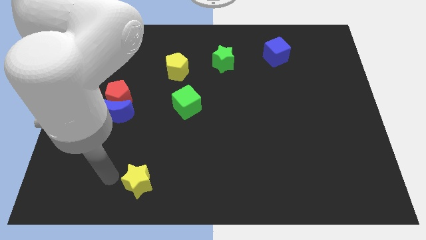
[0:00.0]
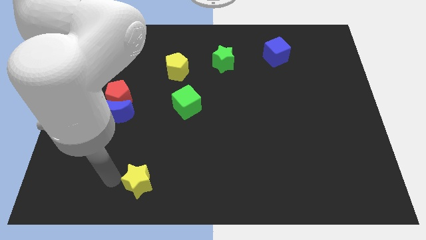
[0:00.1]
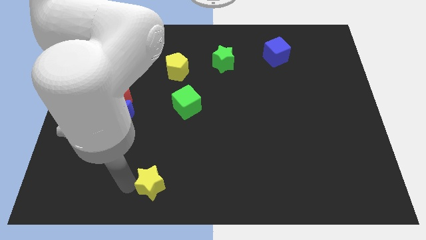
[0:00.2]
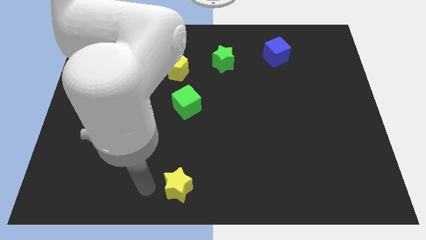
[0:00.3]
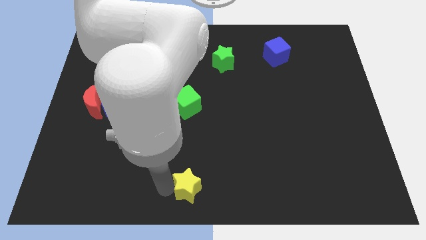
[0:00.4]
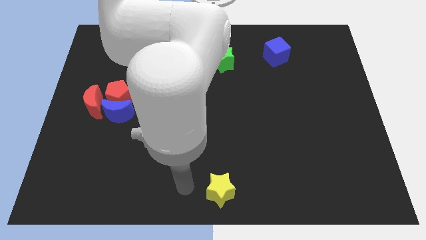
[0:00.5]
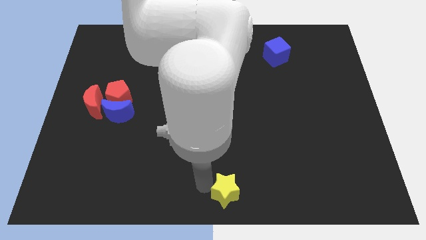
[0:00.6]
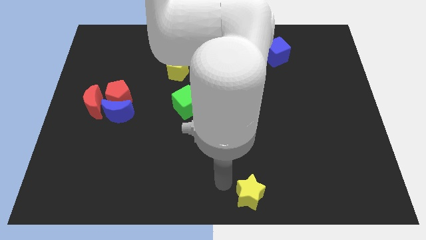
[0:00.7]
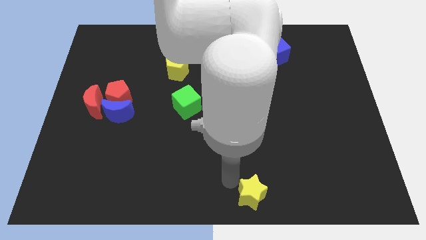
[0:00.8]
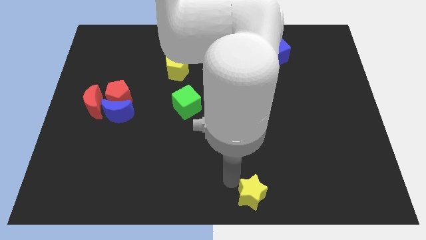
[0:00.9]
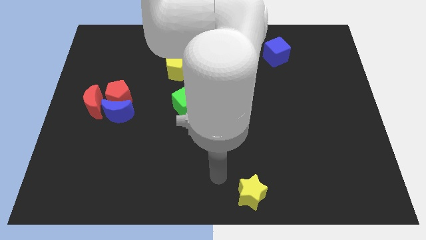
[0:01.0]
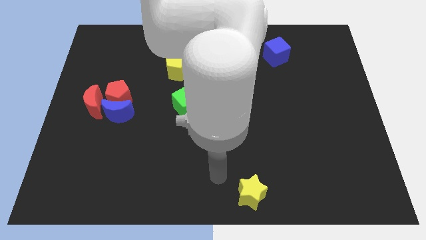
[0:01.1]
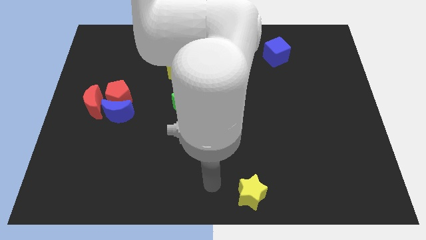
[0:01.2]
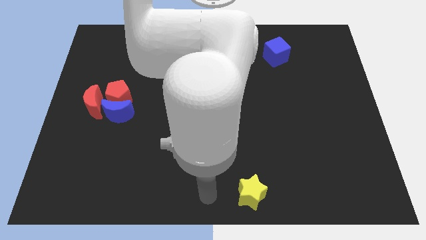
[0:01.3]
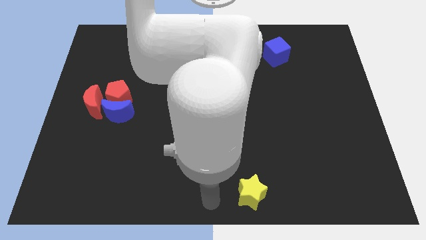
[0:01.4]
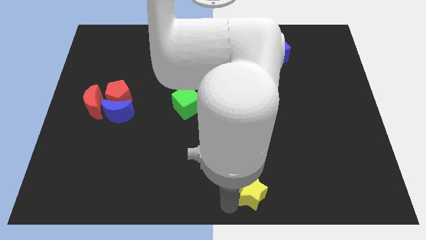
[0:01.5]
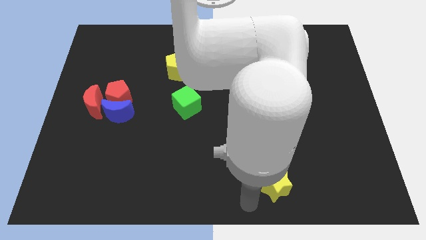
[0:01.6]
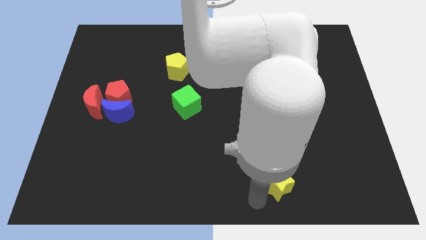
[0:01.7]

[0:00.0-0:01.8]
push the yellow star to the right side of the board

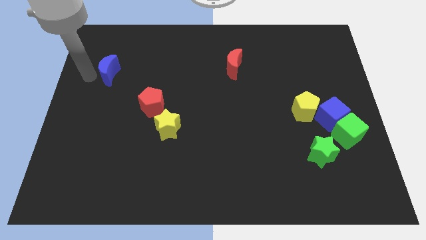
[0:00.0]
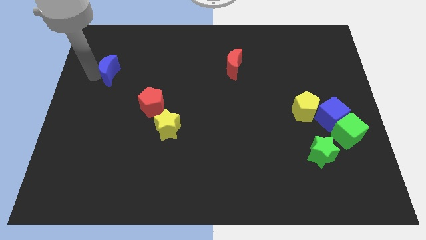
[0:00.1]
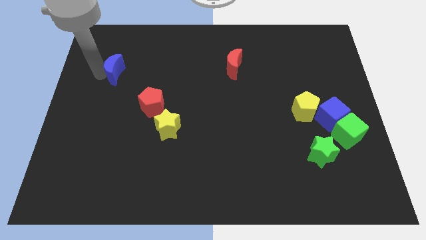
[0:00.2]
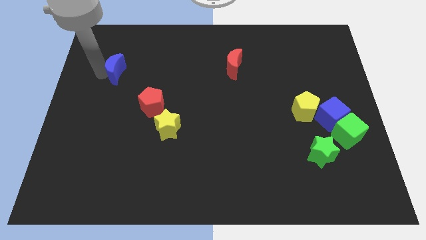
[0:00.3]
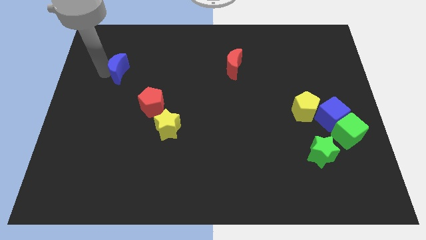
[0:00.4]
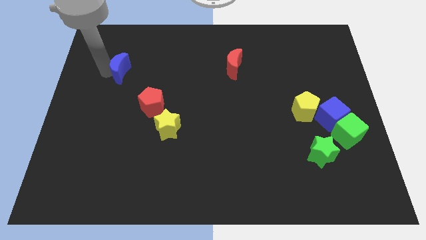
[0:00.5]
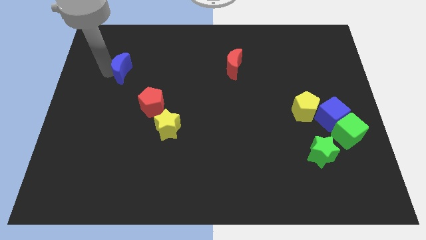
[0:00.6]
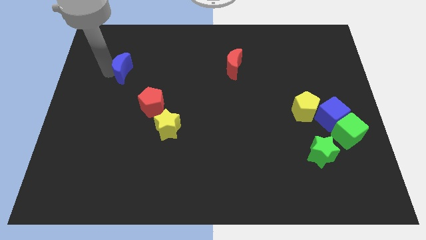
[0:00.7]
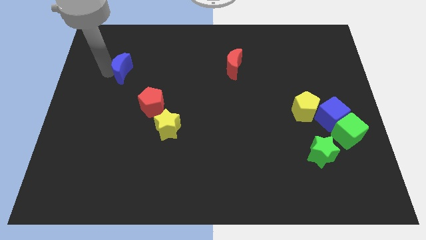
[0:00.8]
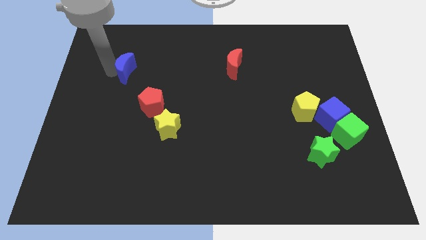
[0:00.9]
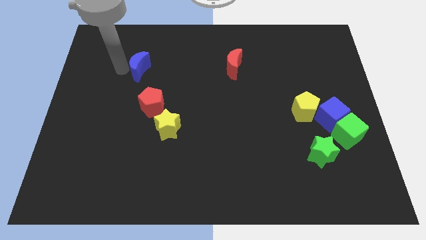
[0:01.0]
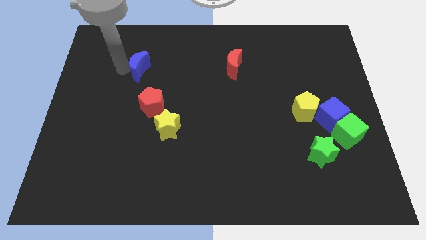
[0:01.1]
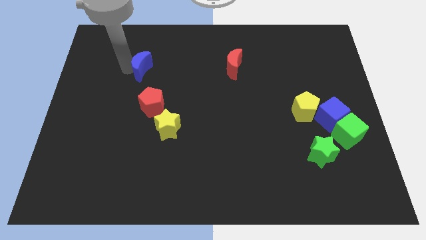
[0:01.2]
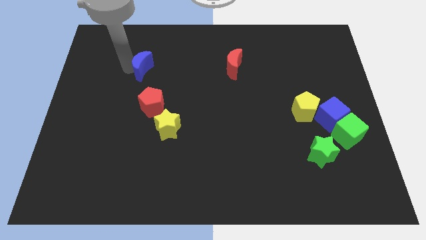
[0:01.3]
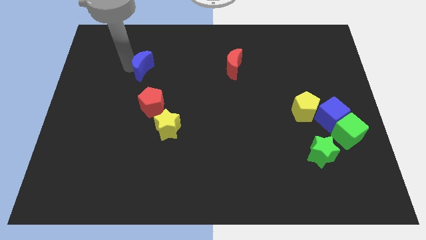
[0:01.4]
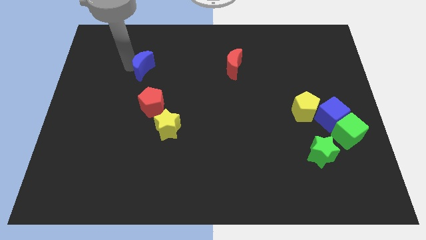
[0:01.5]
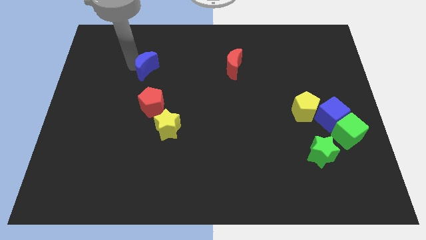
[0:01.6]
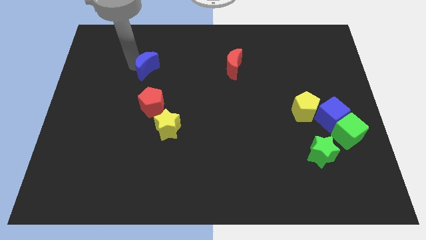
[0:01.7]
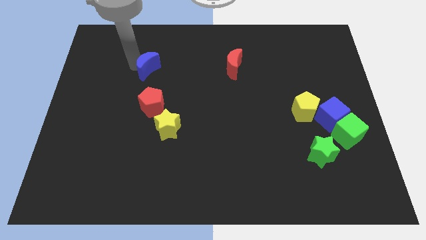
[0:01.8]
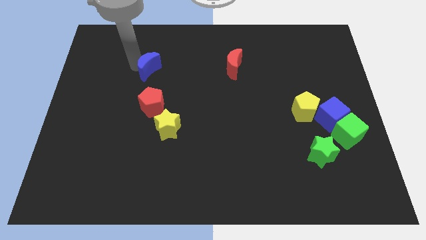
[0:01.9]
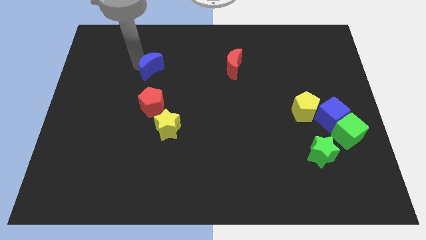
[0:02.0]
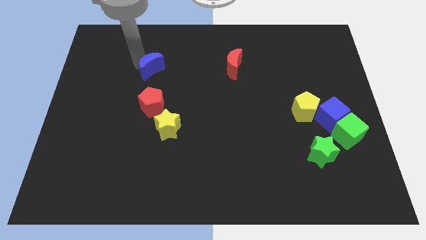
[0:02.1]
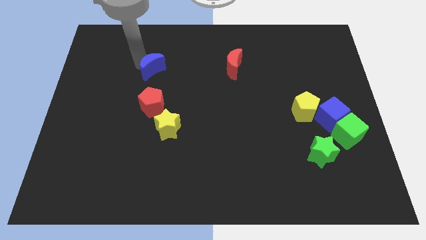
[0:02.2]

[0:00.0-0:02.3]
moev the blue crescent above the red pentagon

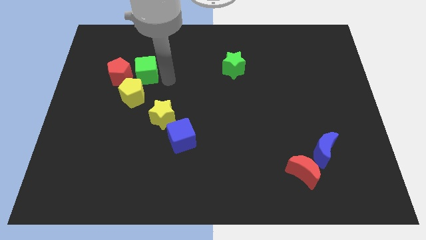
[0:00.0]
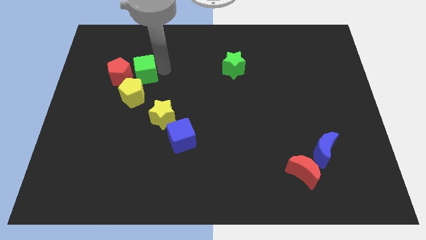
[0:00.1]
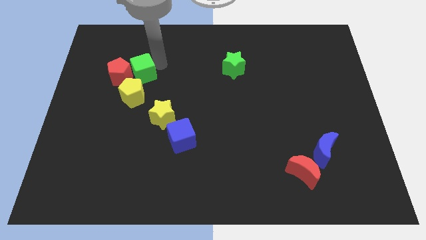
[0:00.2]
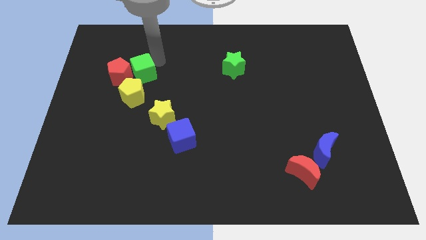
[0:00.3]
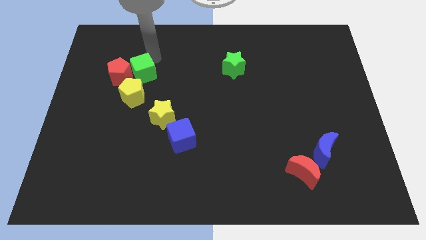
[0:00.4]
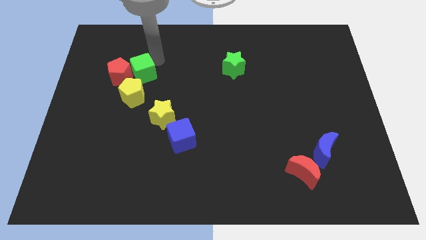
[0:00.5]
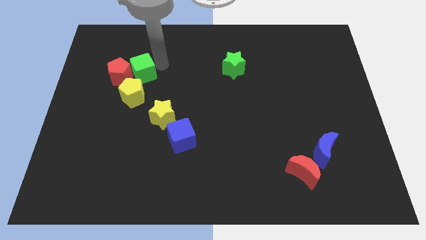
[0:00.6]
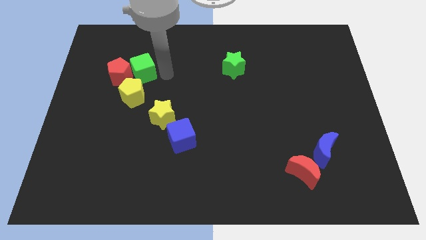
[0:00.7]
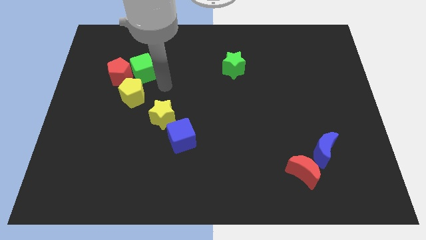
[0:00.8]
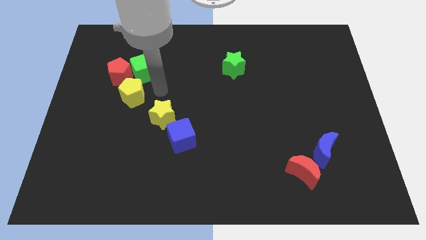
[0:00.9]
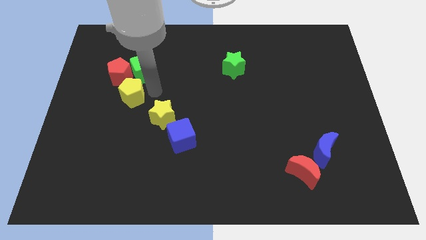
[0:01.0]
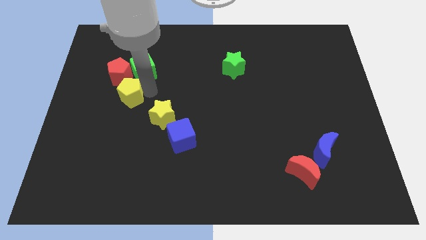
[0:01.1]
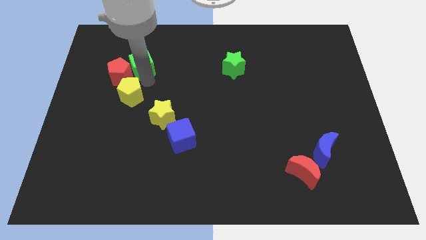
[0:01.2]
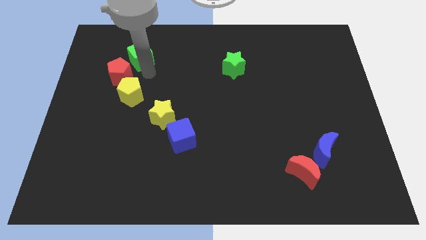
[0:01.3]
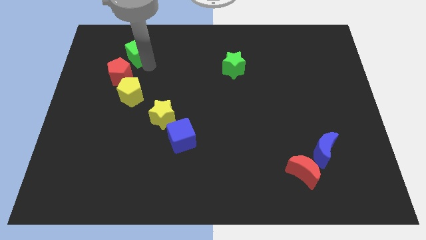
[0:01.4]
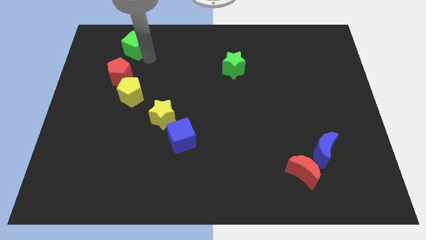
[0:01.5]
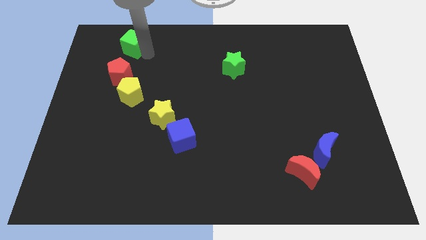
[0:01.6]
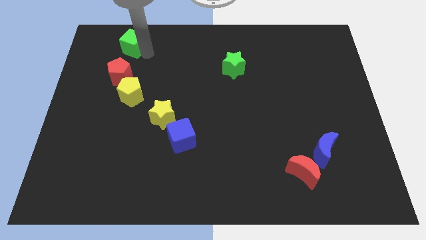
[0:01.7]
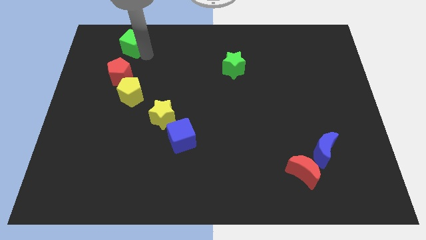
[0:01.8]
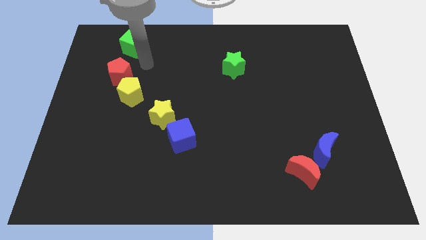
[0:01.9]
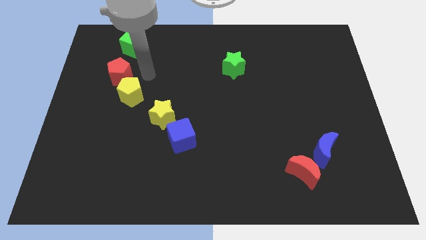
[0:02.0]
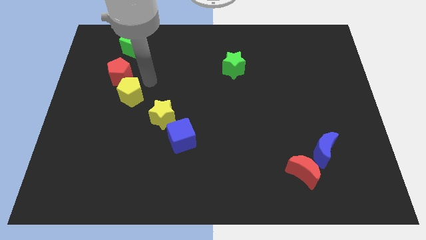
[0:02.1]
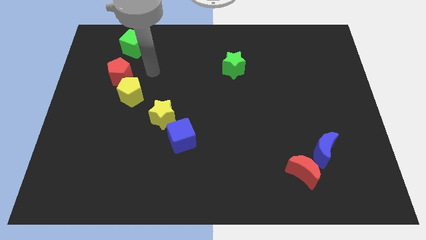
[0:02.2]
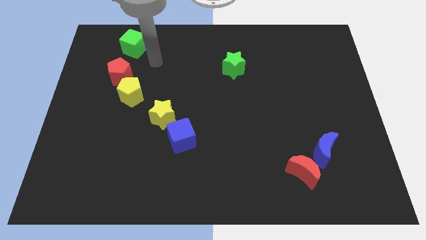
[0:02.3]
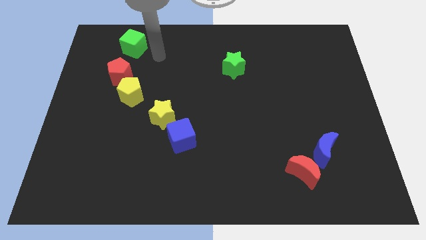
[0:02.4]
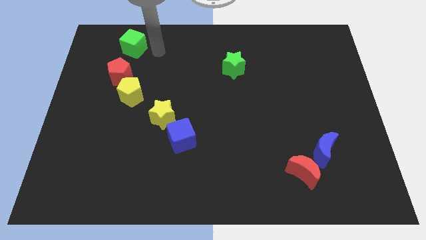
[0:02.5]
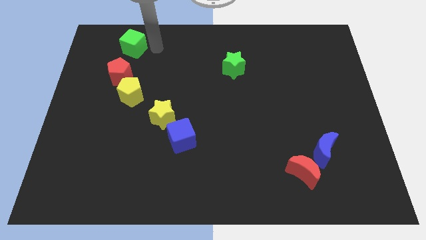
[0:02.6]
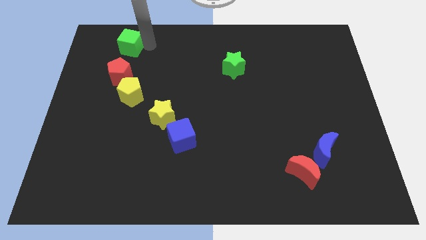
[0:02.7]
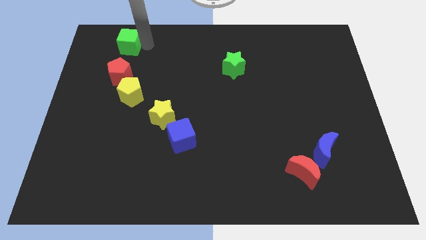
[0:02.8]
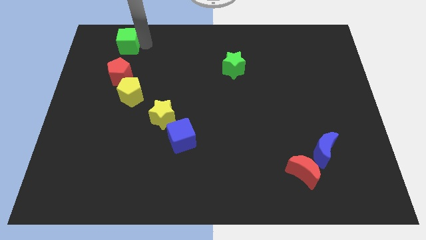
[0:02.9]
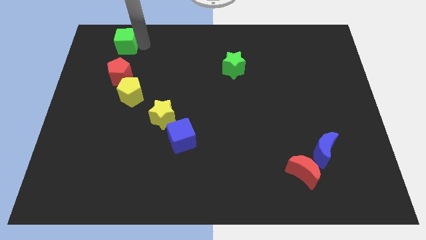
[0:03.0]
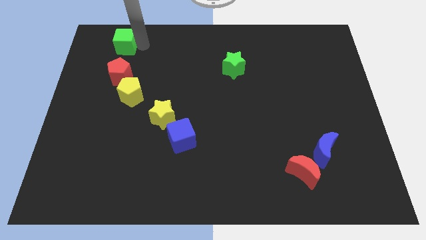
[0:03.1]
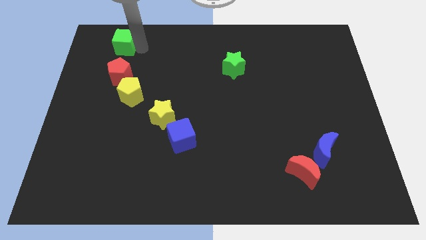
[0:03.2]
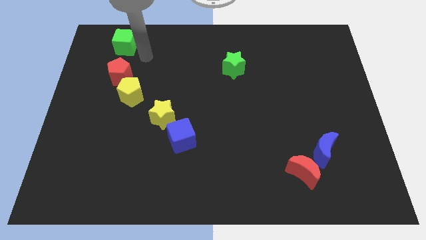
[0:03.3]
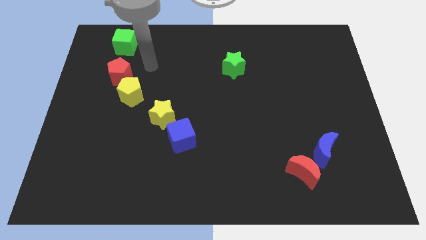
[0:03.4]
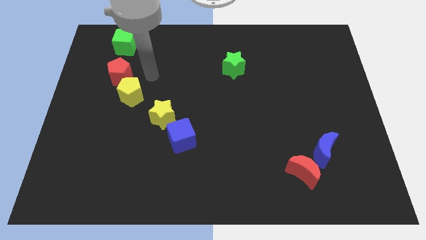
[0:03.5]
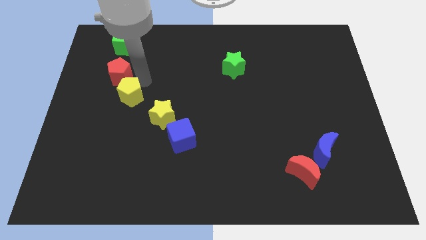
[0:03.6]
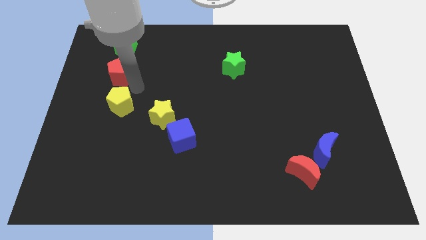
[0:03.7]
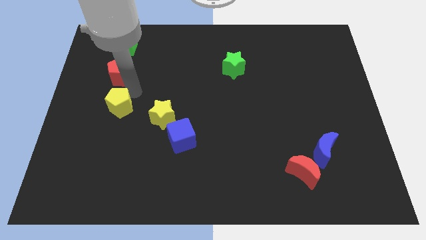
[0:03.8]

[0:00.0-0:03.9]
place green cube above red pentagon

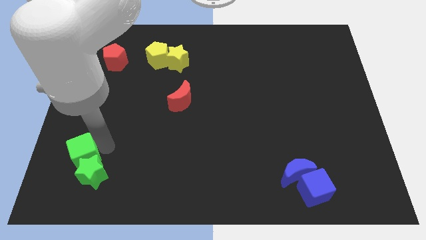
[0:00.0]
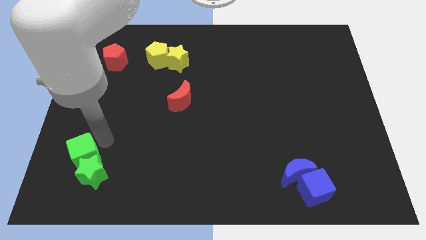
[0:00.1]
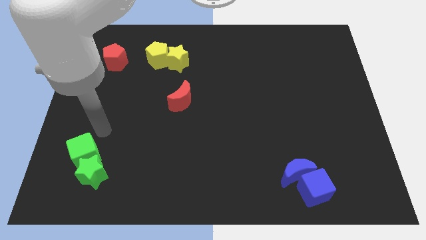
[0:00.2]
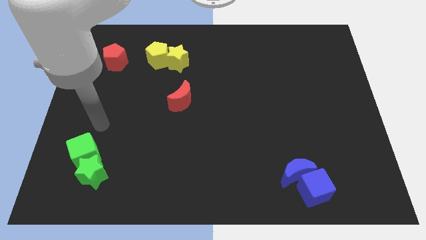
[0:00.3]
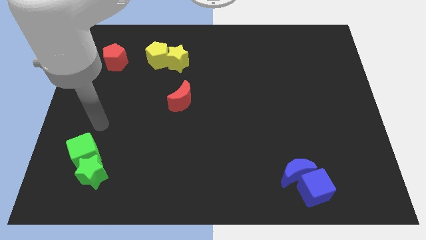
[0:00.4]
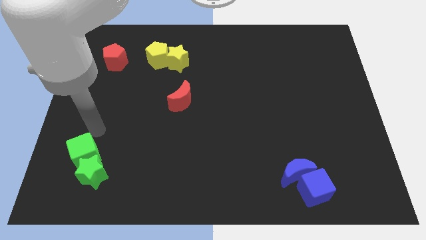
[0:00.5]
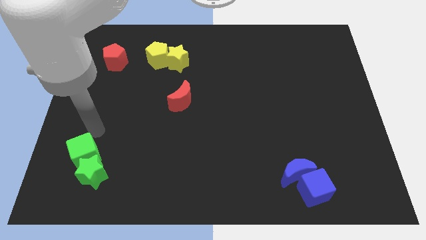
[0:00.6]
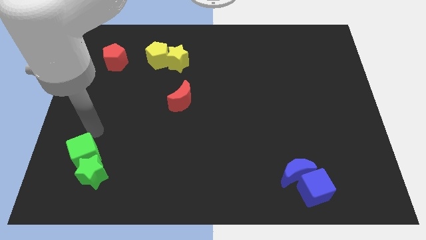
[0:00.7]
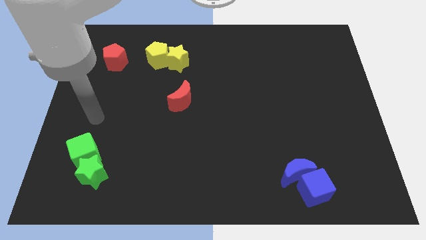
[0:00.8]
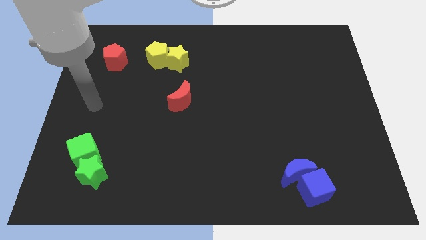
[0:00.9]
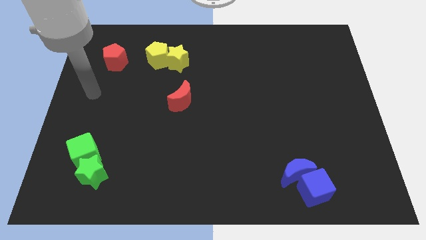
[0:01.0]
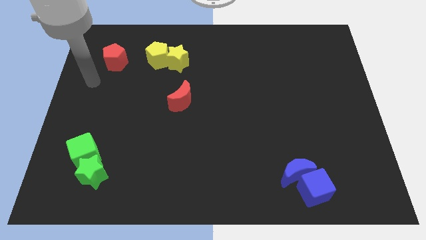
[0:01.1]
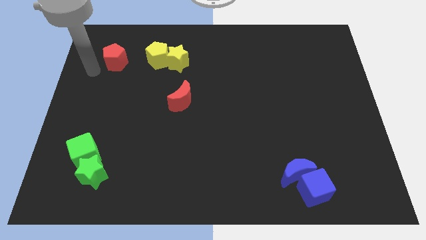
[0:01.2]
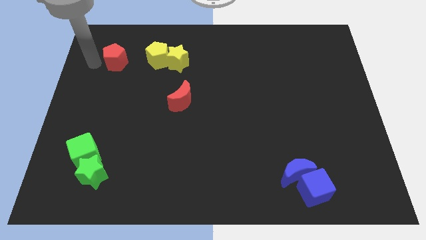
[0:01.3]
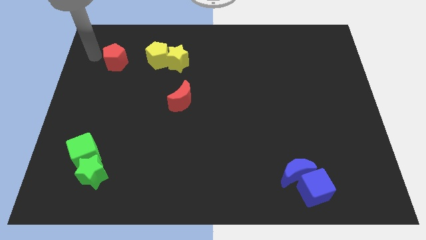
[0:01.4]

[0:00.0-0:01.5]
go close to the left side of the red pentagon
